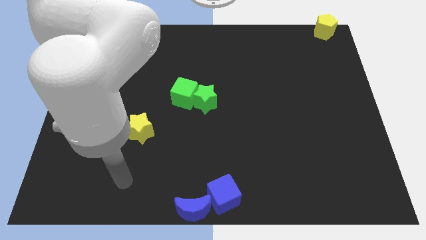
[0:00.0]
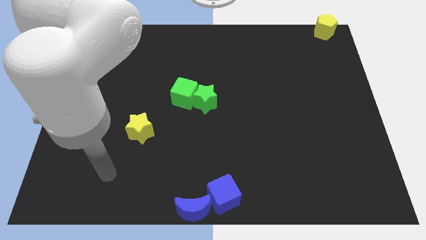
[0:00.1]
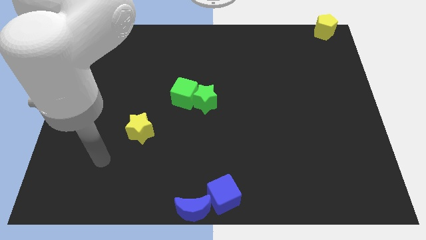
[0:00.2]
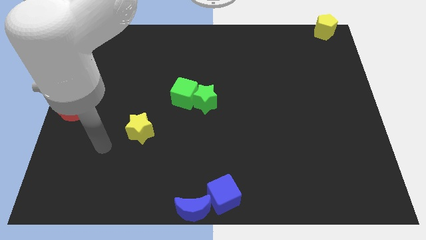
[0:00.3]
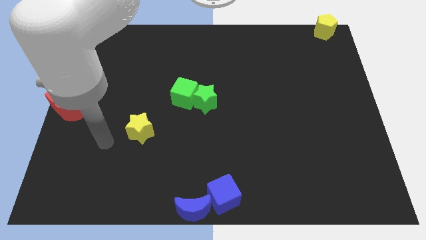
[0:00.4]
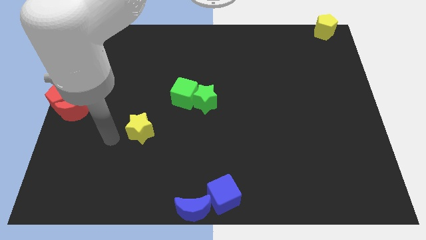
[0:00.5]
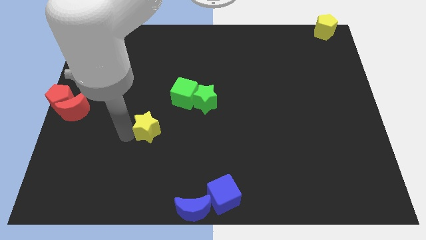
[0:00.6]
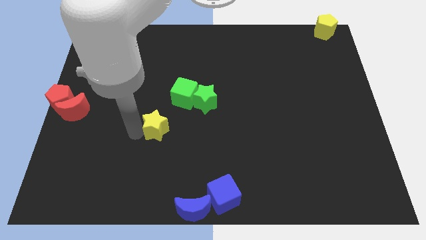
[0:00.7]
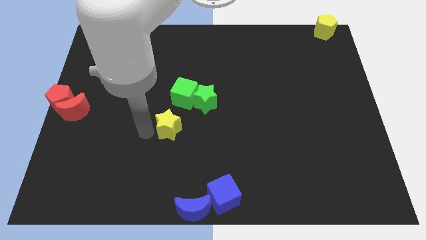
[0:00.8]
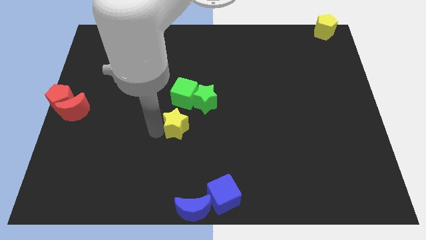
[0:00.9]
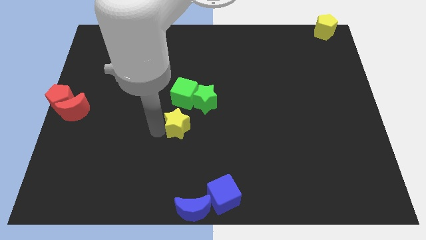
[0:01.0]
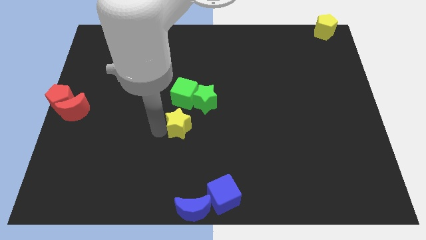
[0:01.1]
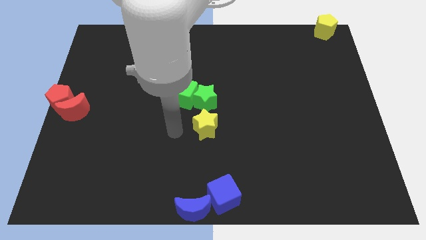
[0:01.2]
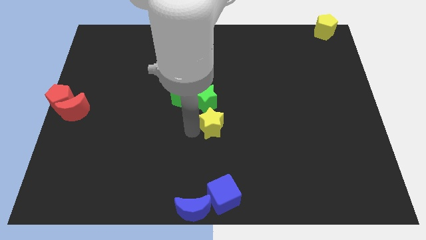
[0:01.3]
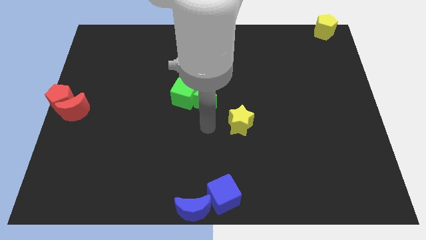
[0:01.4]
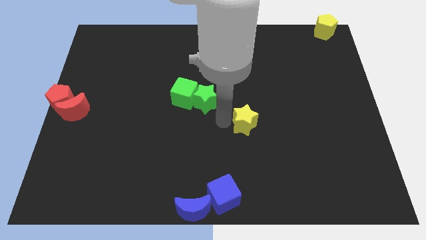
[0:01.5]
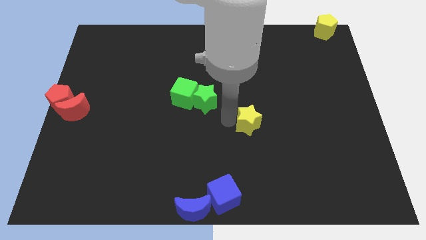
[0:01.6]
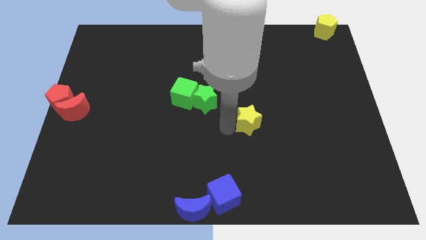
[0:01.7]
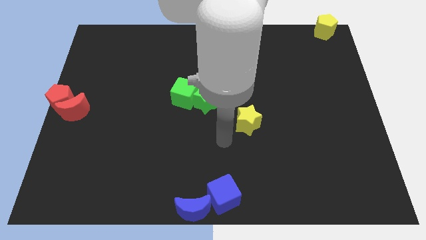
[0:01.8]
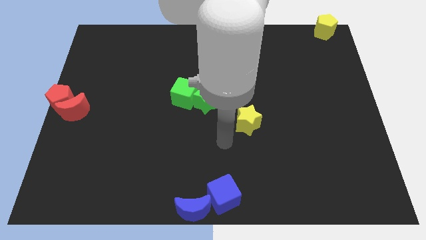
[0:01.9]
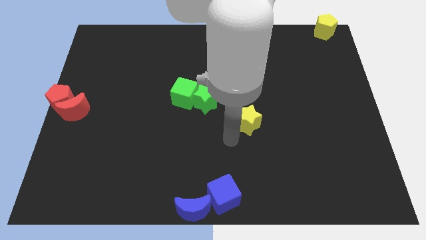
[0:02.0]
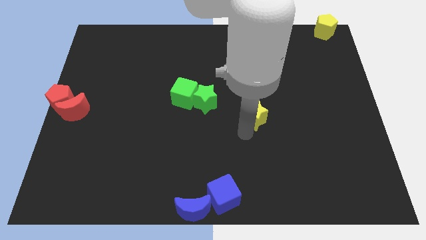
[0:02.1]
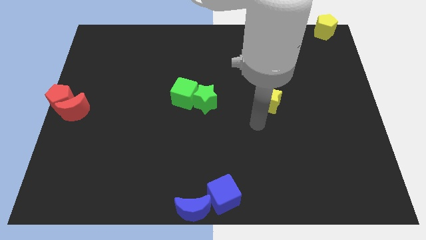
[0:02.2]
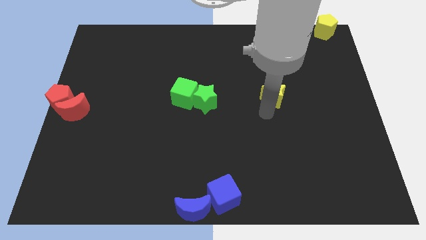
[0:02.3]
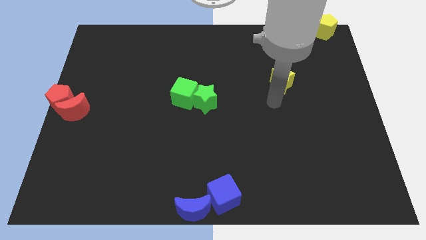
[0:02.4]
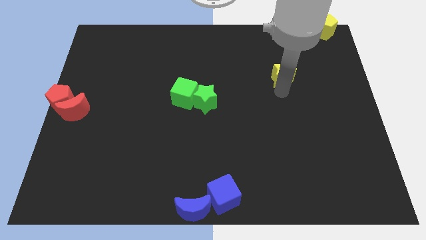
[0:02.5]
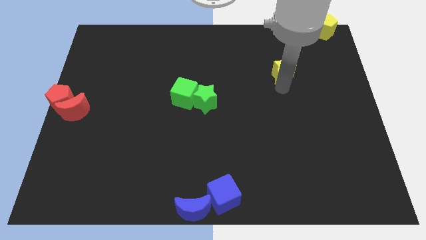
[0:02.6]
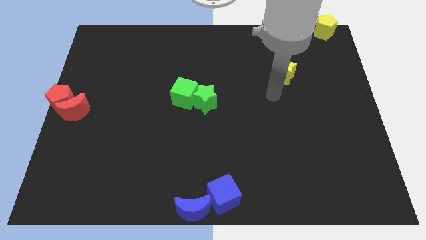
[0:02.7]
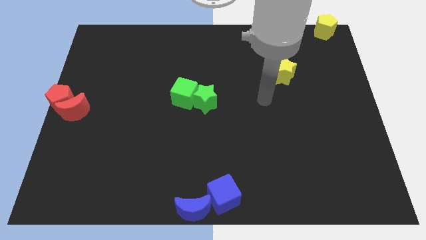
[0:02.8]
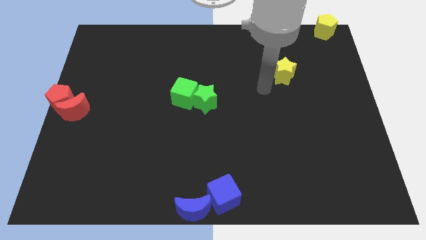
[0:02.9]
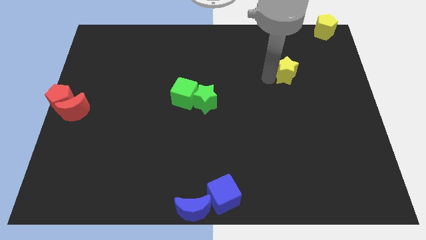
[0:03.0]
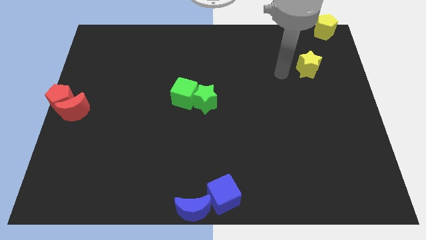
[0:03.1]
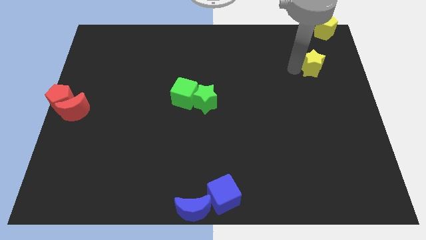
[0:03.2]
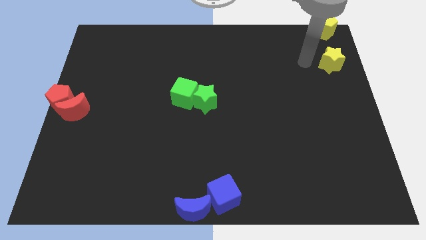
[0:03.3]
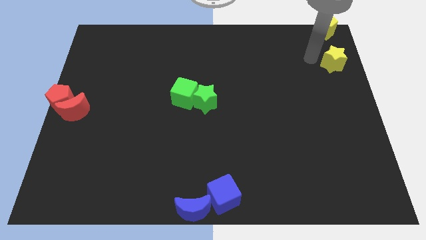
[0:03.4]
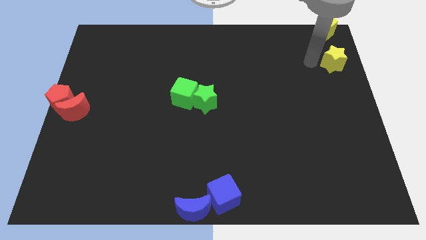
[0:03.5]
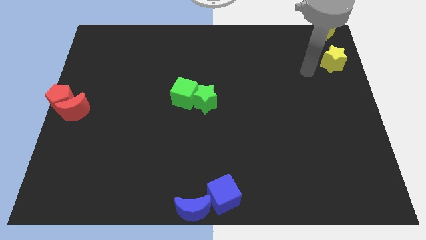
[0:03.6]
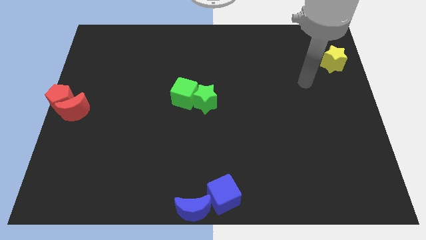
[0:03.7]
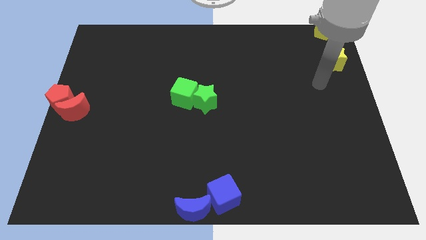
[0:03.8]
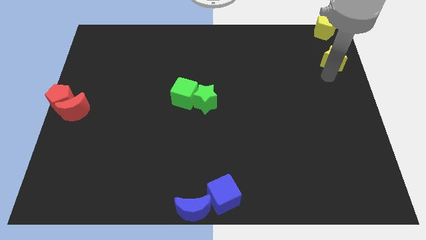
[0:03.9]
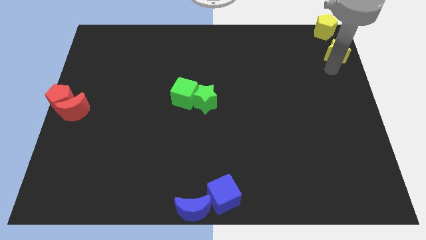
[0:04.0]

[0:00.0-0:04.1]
place the yellow star diagonal to the bottom of the yellow pentagon

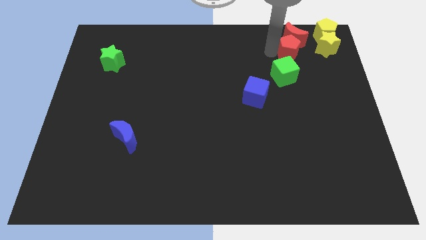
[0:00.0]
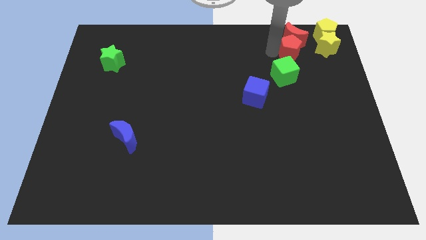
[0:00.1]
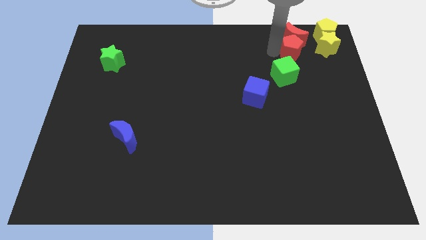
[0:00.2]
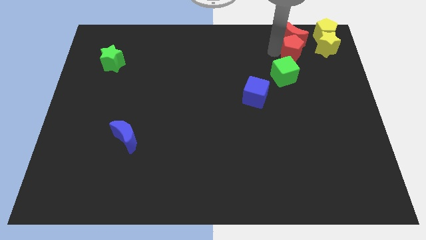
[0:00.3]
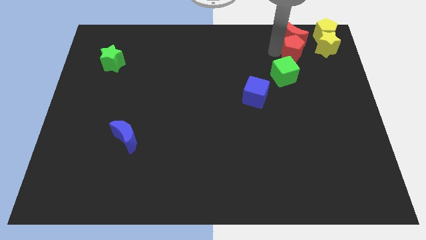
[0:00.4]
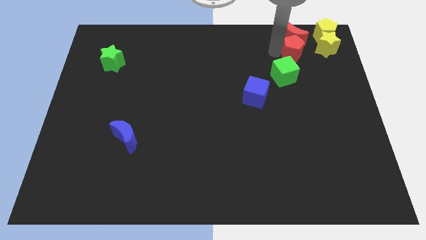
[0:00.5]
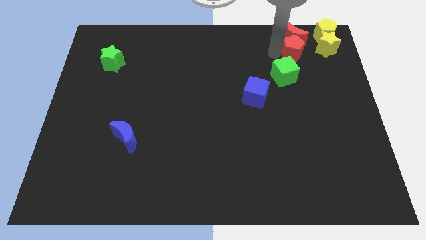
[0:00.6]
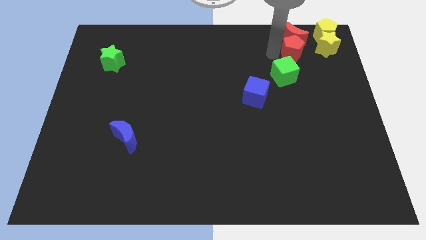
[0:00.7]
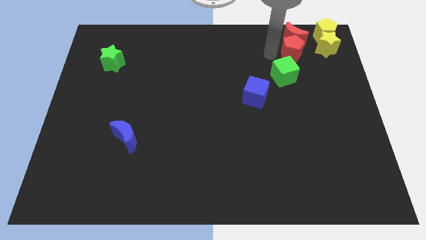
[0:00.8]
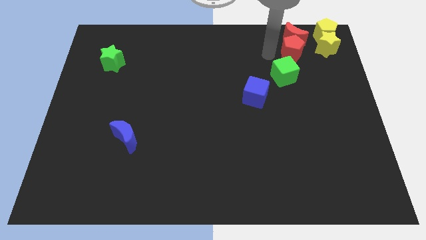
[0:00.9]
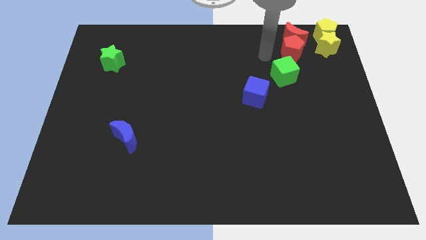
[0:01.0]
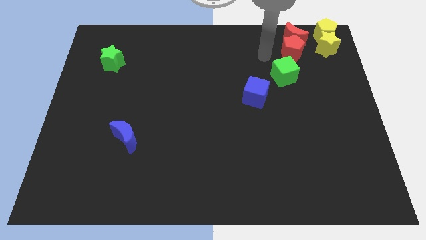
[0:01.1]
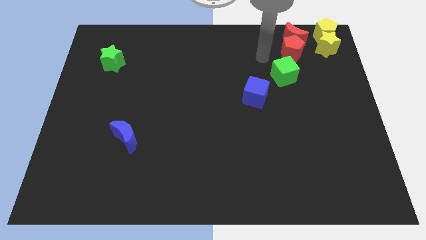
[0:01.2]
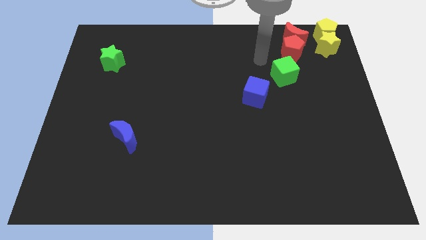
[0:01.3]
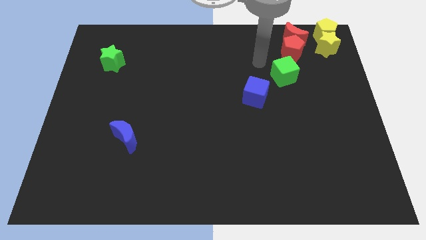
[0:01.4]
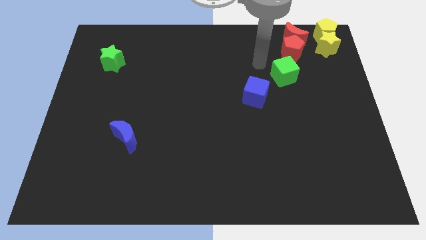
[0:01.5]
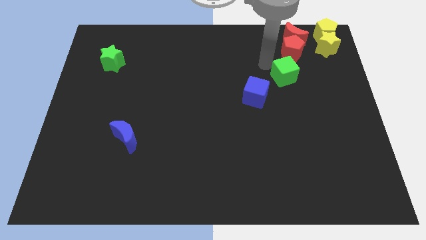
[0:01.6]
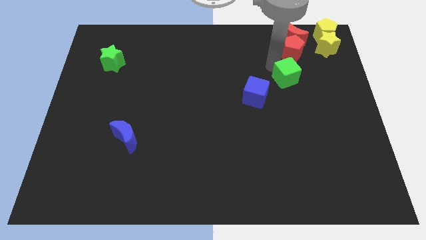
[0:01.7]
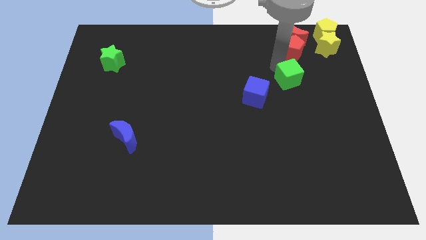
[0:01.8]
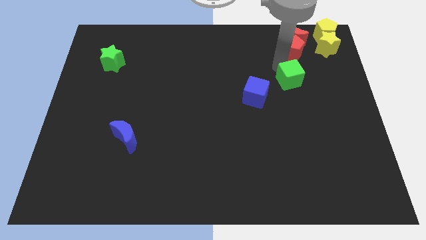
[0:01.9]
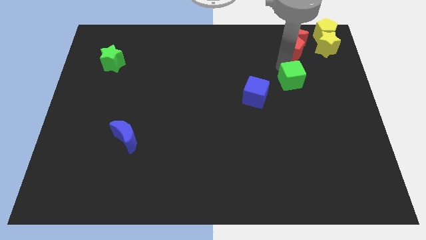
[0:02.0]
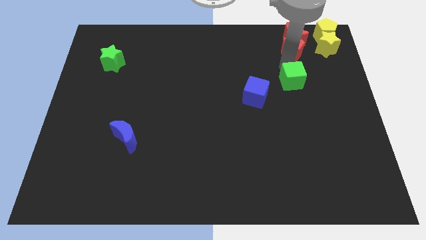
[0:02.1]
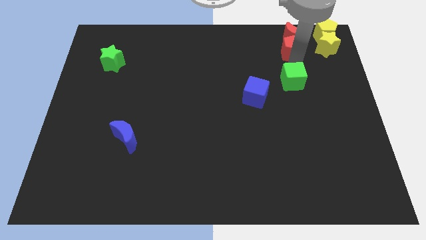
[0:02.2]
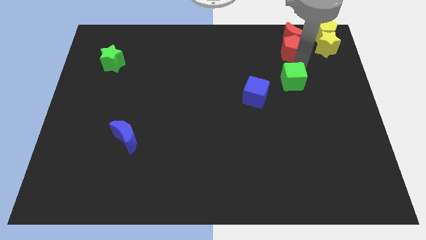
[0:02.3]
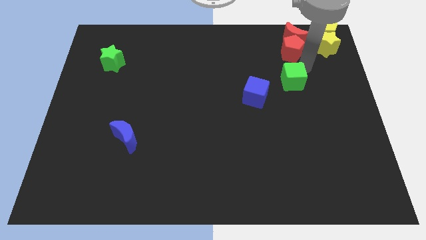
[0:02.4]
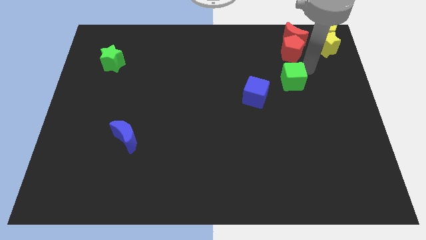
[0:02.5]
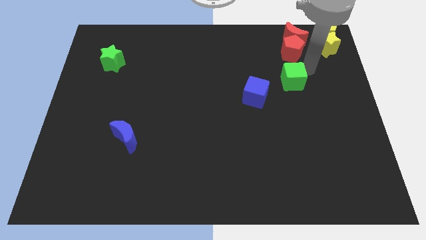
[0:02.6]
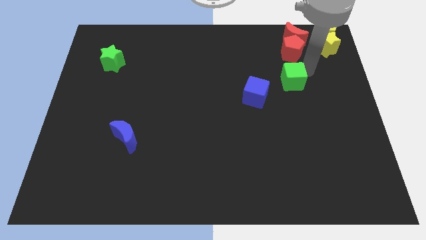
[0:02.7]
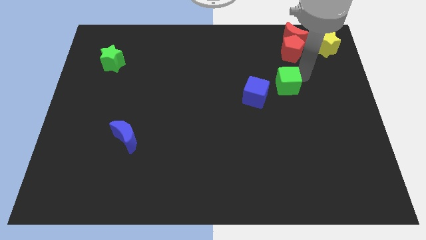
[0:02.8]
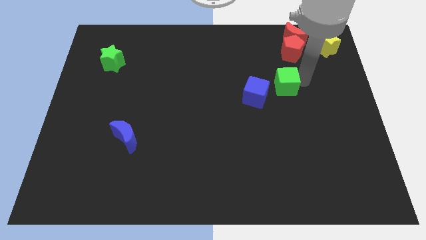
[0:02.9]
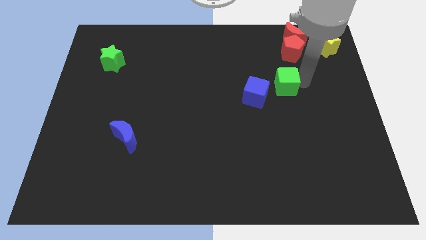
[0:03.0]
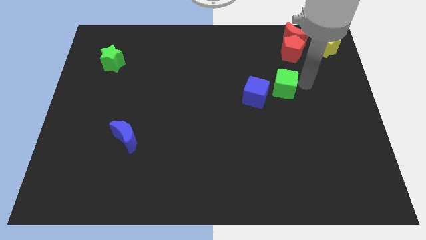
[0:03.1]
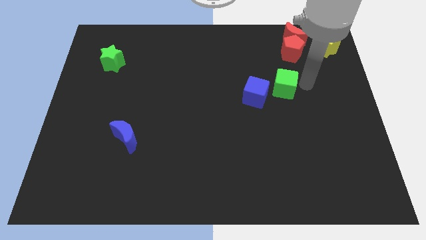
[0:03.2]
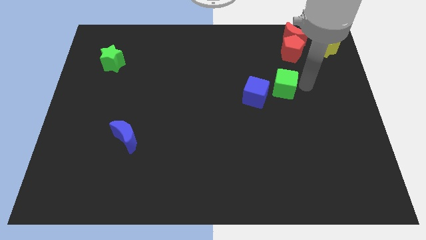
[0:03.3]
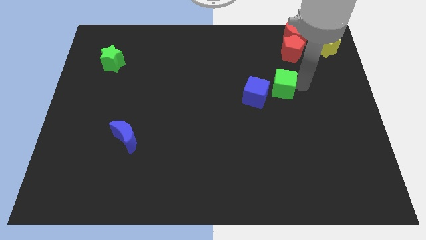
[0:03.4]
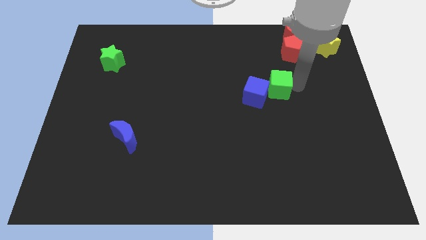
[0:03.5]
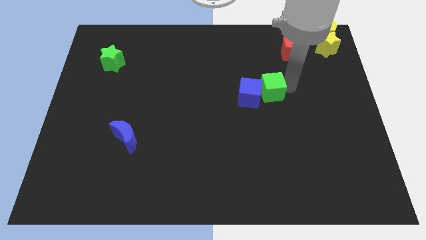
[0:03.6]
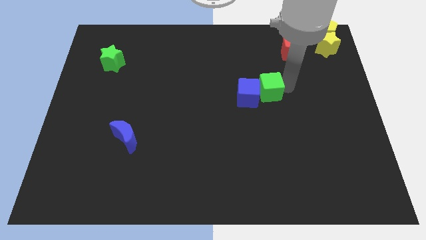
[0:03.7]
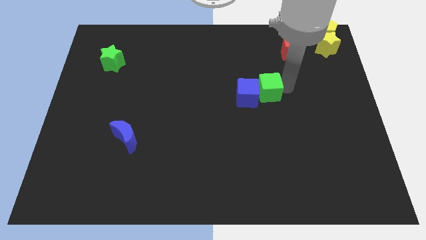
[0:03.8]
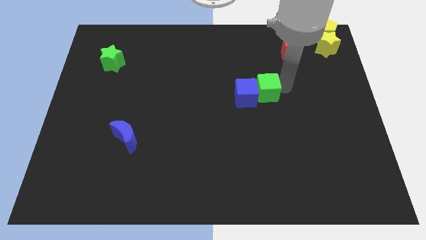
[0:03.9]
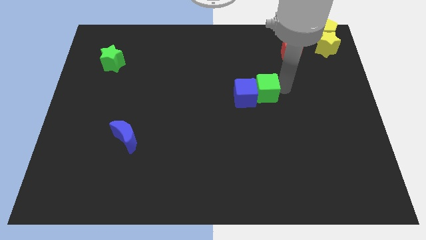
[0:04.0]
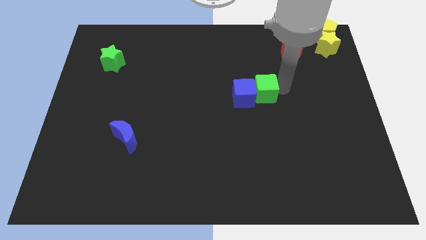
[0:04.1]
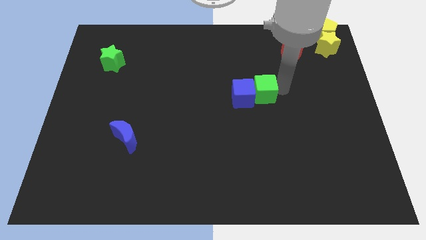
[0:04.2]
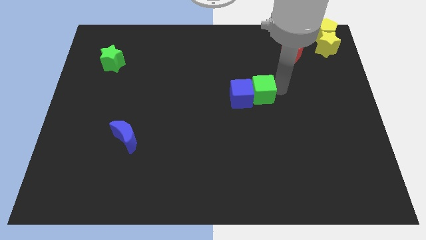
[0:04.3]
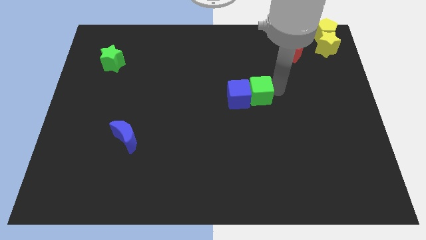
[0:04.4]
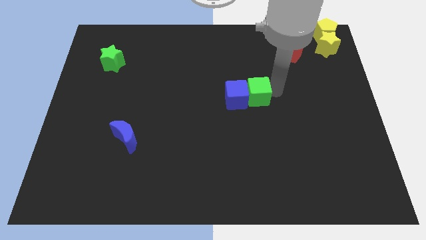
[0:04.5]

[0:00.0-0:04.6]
move green cube into blue cube

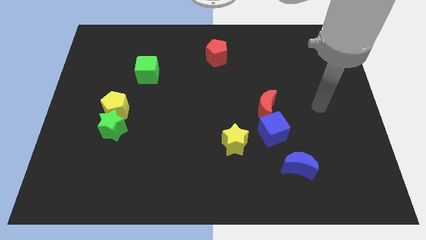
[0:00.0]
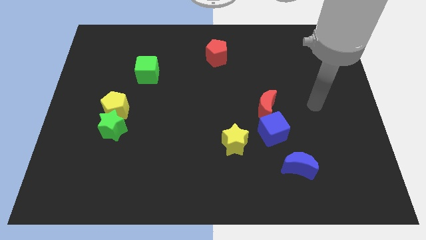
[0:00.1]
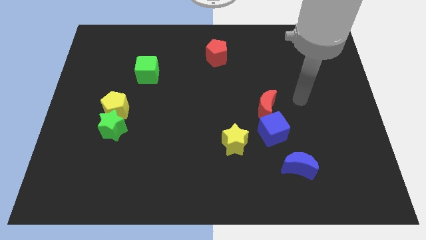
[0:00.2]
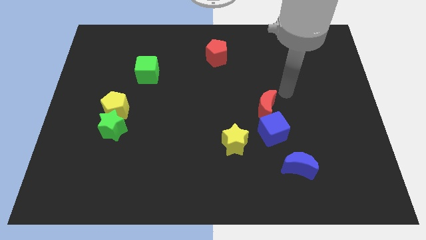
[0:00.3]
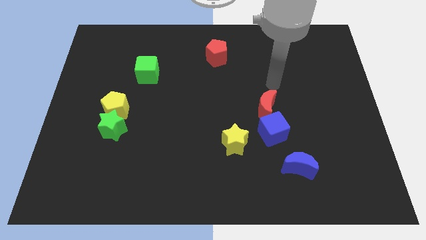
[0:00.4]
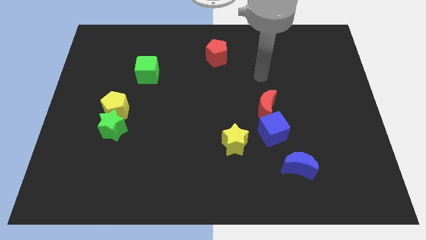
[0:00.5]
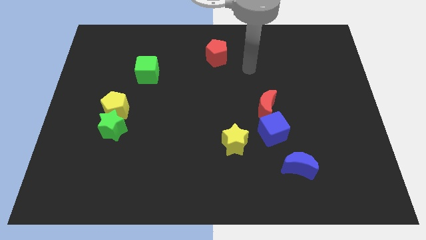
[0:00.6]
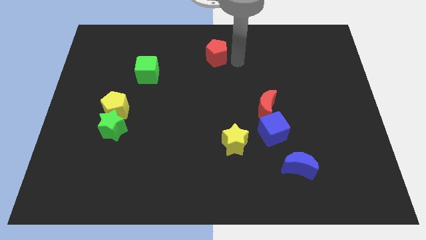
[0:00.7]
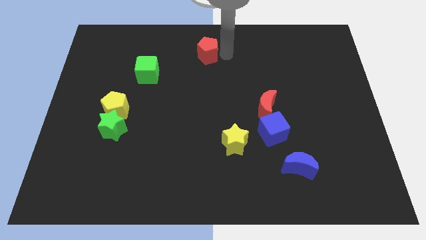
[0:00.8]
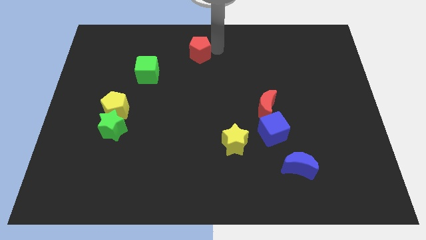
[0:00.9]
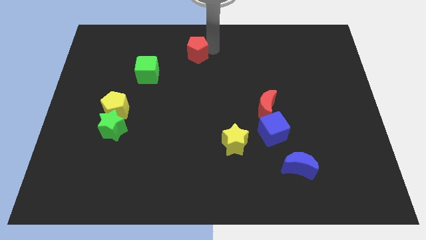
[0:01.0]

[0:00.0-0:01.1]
slide the red pentagon diagonally top left to the yellow star
